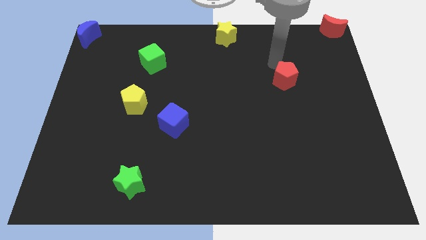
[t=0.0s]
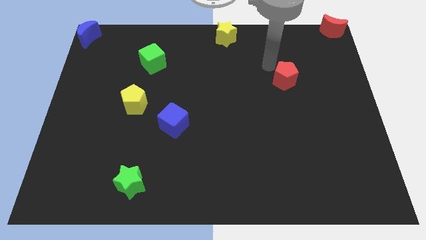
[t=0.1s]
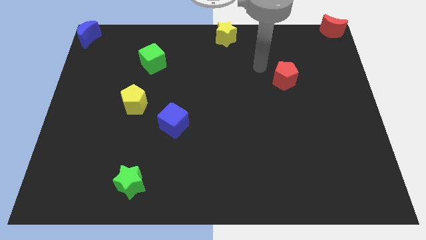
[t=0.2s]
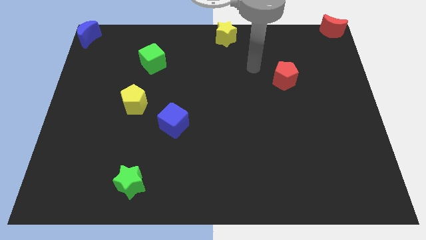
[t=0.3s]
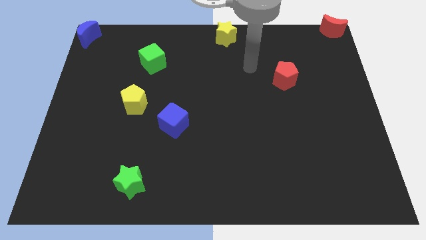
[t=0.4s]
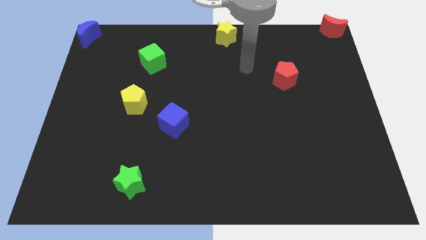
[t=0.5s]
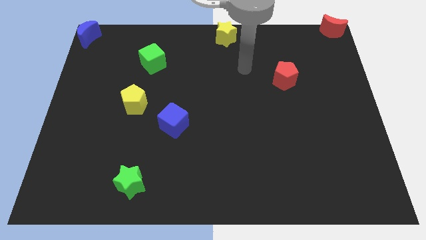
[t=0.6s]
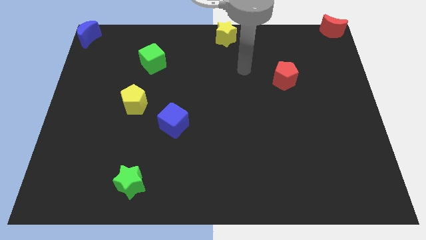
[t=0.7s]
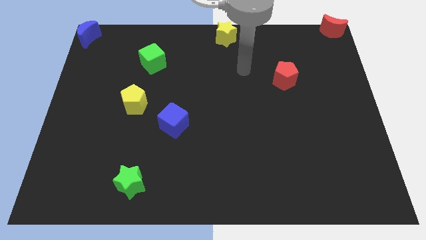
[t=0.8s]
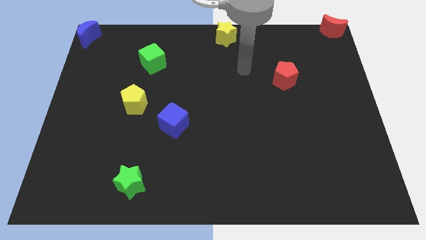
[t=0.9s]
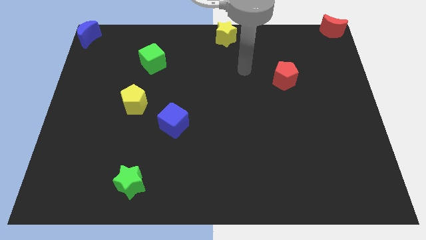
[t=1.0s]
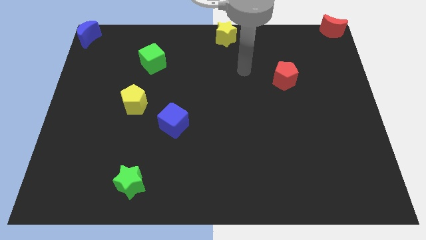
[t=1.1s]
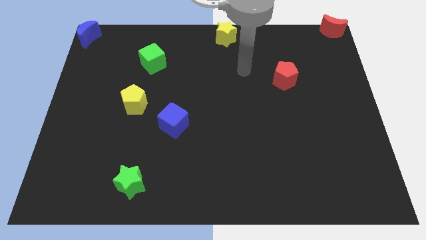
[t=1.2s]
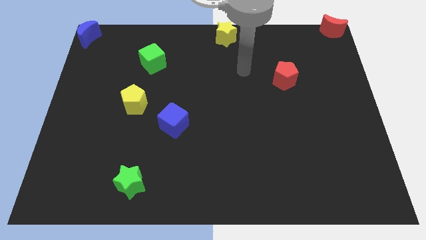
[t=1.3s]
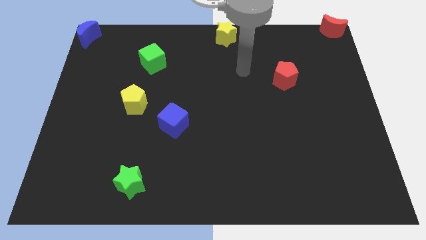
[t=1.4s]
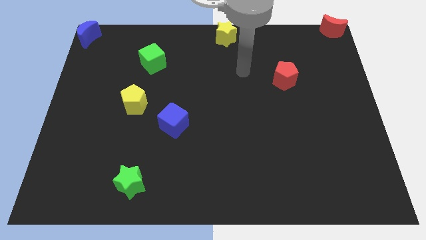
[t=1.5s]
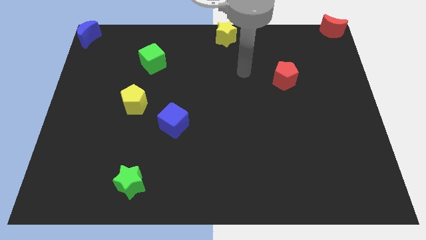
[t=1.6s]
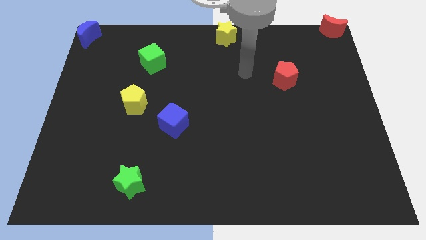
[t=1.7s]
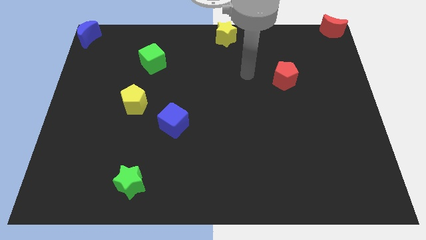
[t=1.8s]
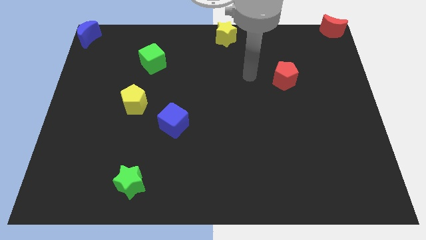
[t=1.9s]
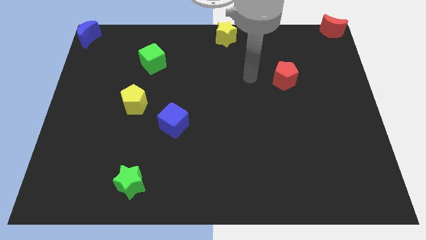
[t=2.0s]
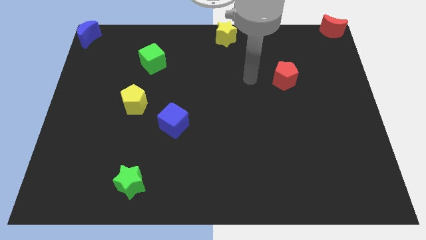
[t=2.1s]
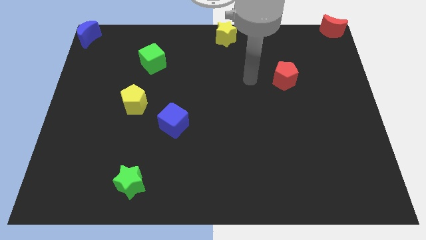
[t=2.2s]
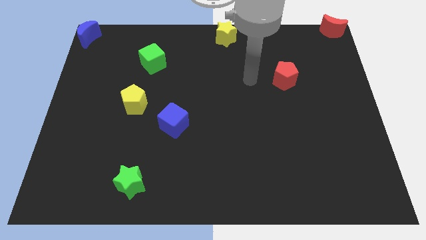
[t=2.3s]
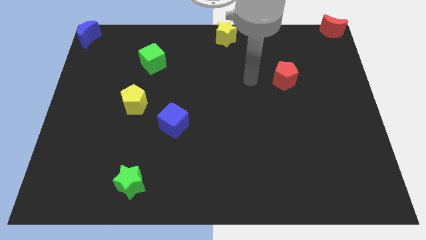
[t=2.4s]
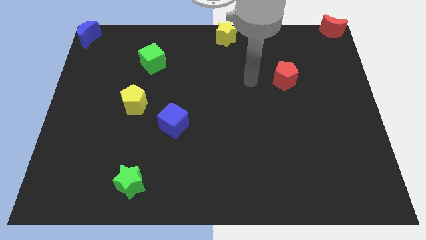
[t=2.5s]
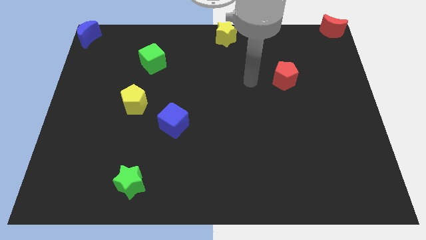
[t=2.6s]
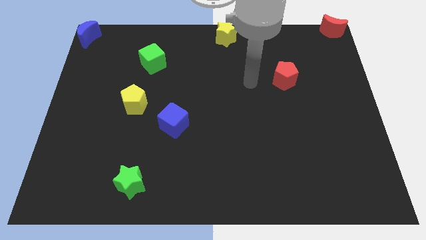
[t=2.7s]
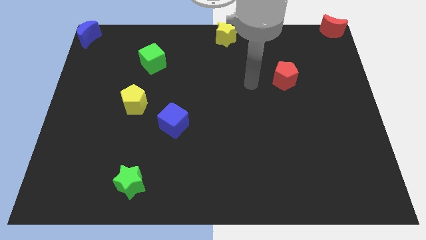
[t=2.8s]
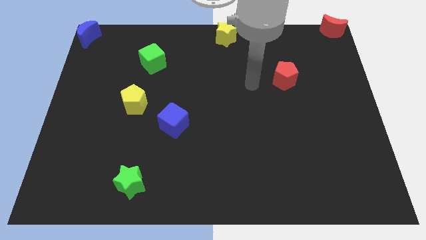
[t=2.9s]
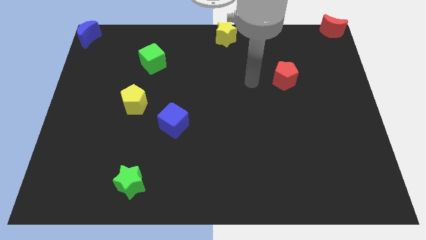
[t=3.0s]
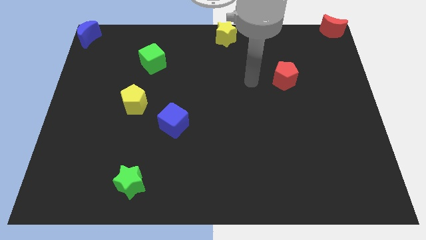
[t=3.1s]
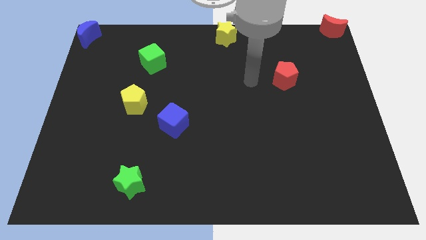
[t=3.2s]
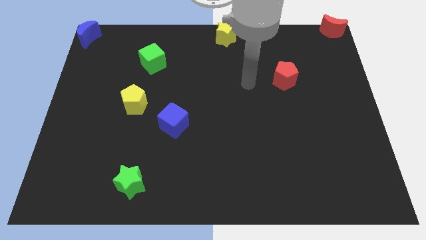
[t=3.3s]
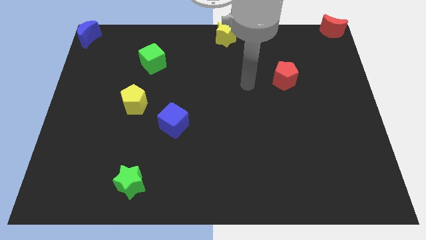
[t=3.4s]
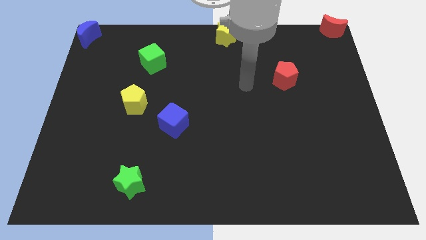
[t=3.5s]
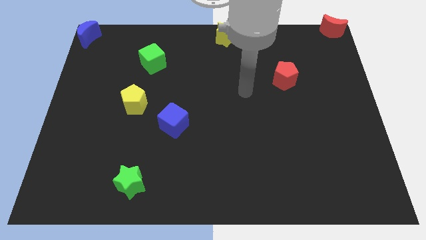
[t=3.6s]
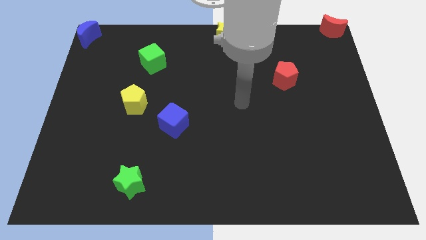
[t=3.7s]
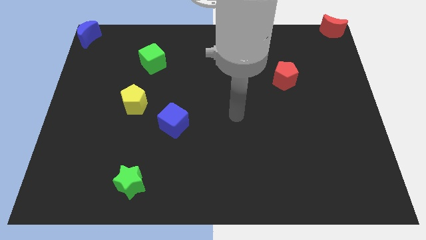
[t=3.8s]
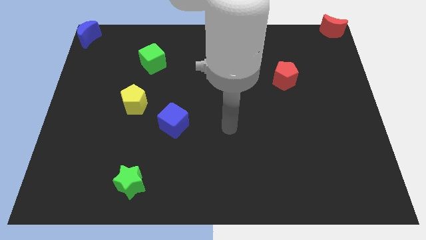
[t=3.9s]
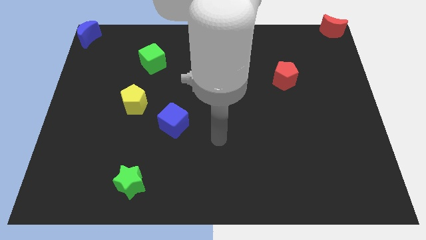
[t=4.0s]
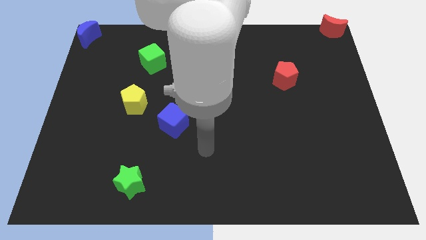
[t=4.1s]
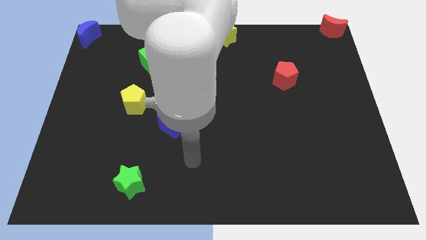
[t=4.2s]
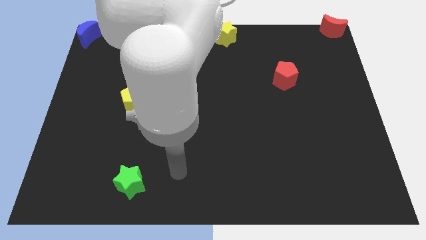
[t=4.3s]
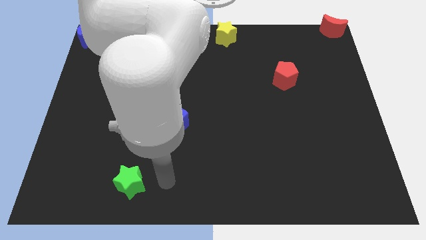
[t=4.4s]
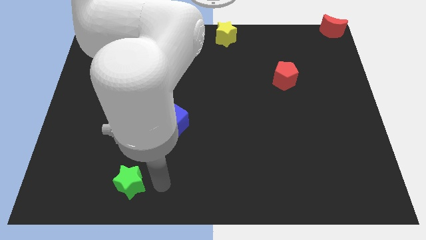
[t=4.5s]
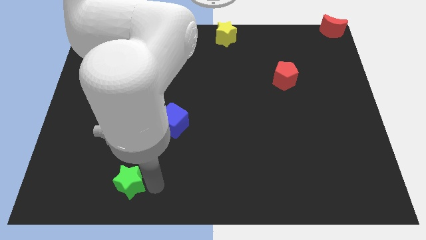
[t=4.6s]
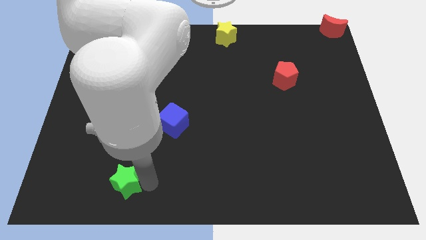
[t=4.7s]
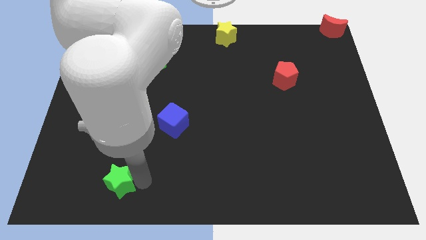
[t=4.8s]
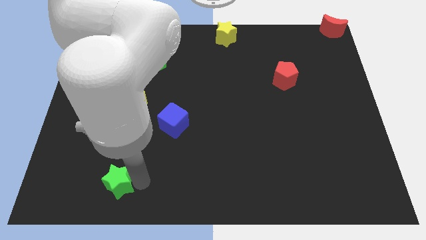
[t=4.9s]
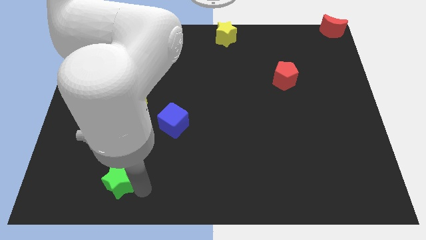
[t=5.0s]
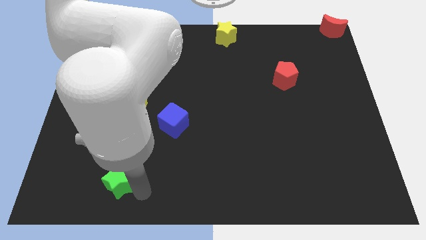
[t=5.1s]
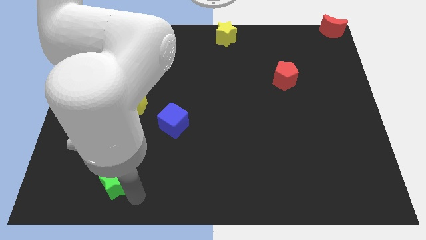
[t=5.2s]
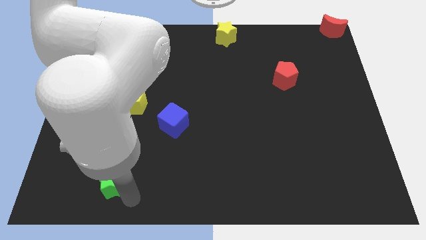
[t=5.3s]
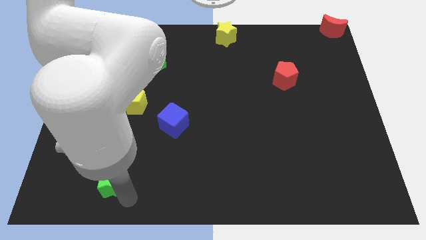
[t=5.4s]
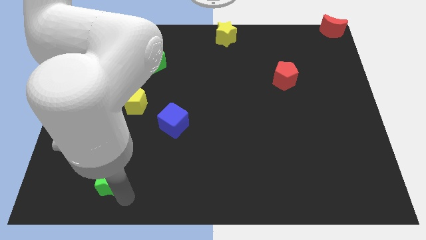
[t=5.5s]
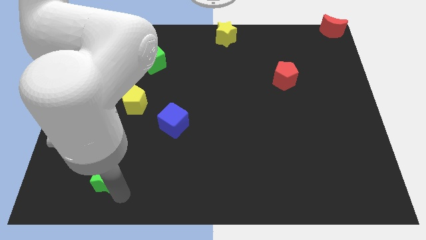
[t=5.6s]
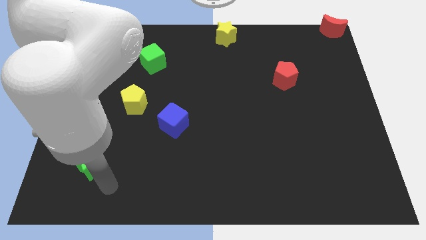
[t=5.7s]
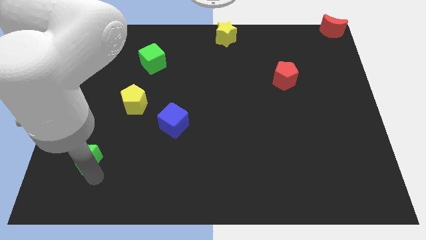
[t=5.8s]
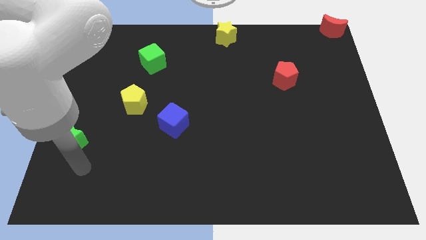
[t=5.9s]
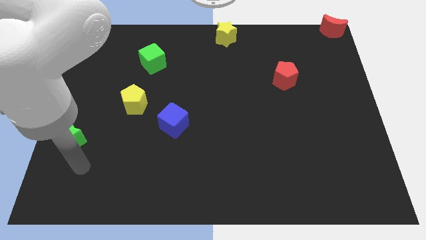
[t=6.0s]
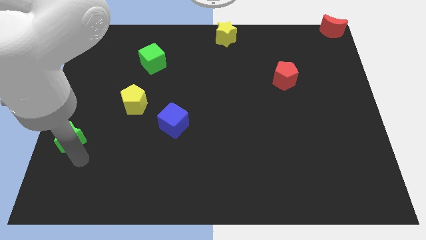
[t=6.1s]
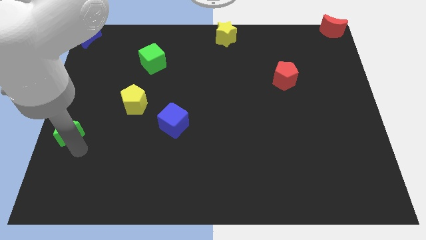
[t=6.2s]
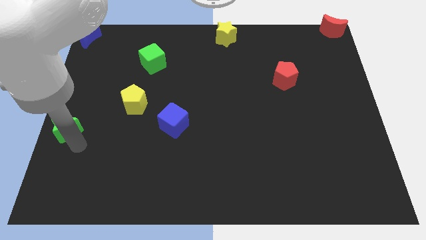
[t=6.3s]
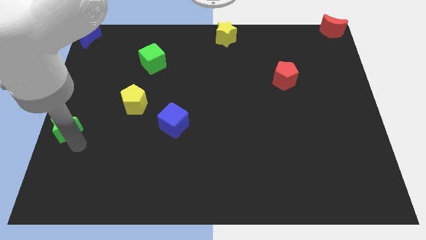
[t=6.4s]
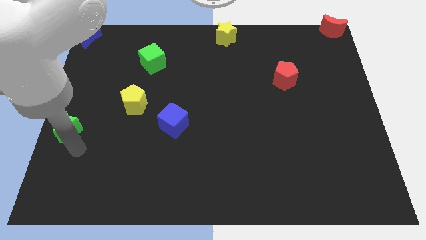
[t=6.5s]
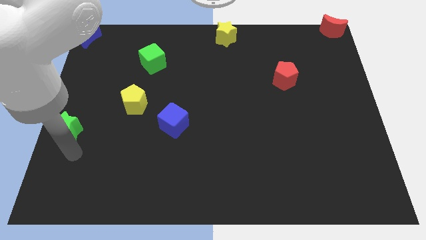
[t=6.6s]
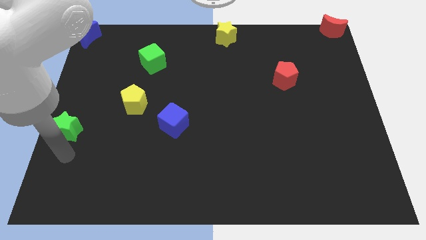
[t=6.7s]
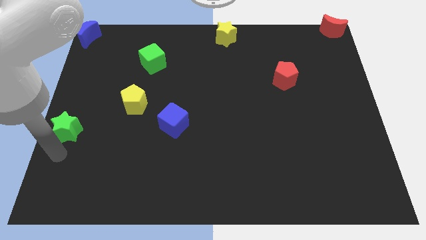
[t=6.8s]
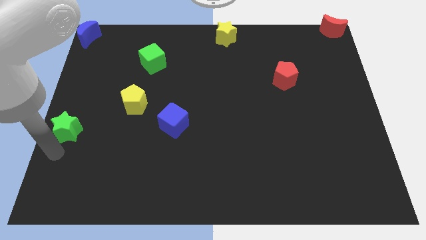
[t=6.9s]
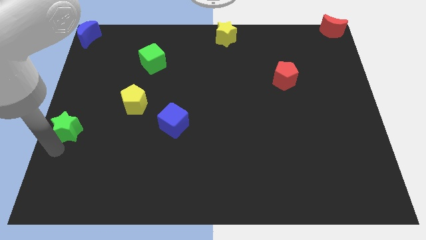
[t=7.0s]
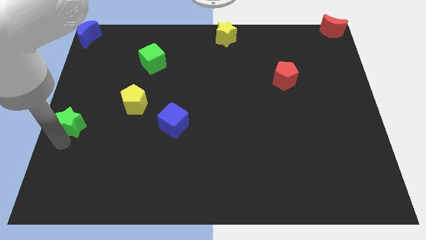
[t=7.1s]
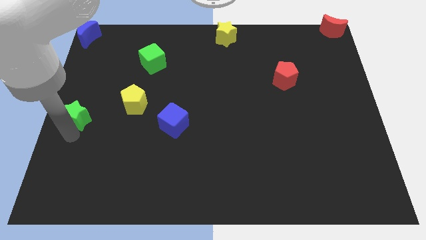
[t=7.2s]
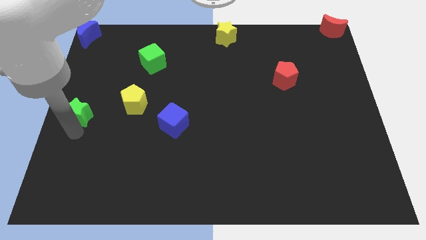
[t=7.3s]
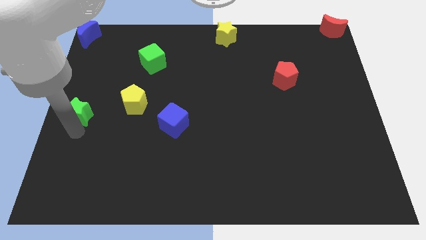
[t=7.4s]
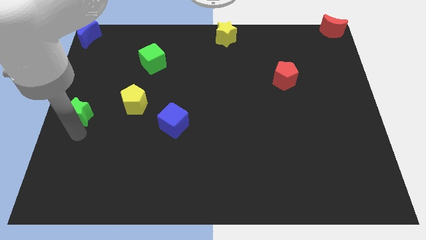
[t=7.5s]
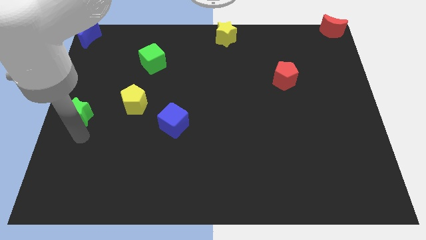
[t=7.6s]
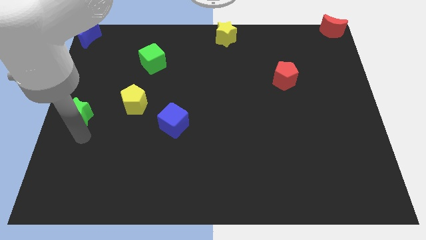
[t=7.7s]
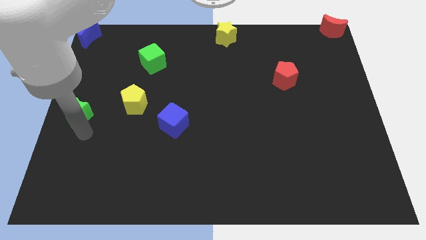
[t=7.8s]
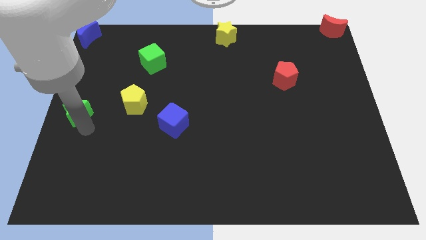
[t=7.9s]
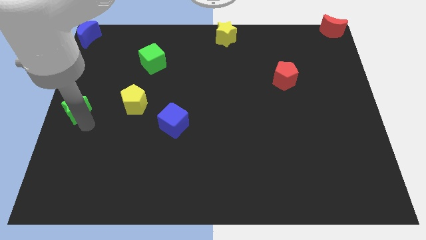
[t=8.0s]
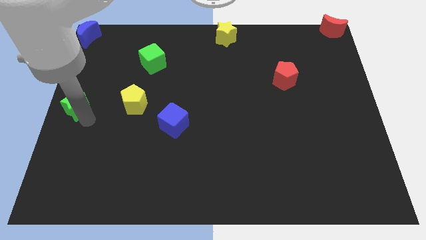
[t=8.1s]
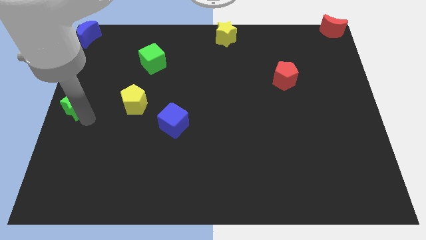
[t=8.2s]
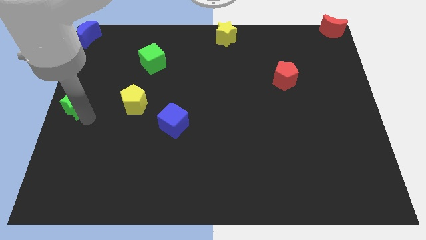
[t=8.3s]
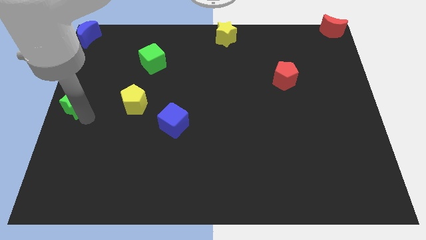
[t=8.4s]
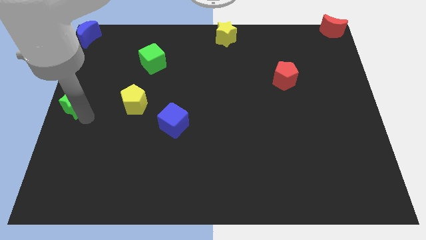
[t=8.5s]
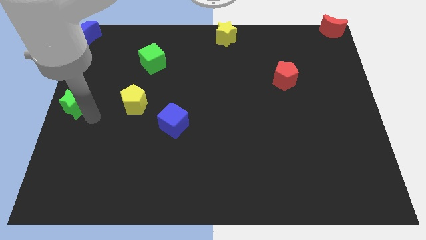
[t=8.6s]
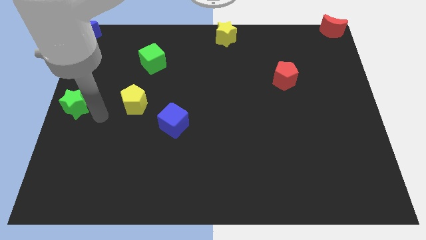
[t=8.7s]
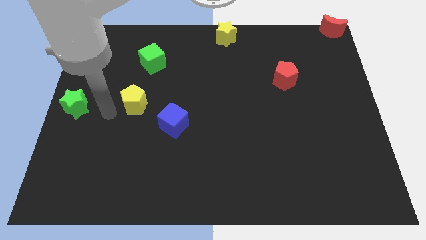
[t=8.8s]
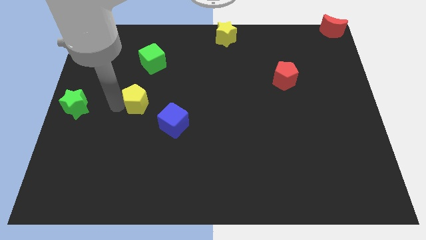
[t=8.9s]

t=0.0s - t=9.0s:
move green star to the left center of the board
